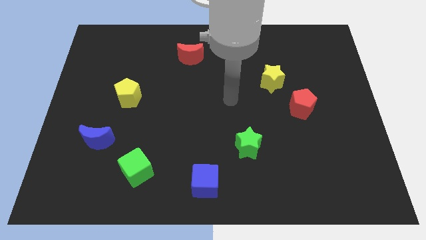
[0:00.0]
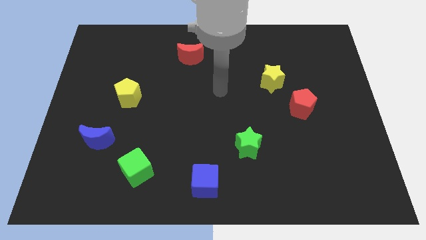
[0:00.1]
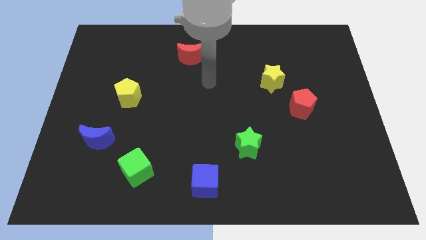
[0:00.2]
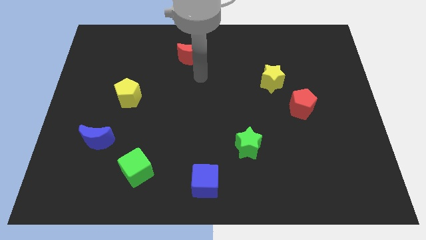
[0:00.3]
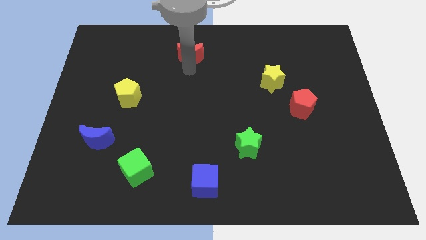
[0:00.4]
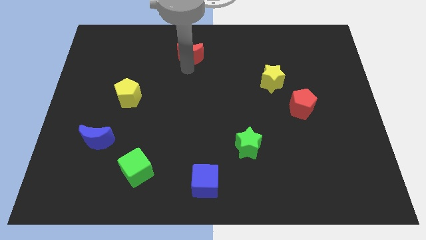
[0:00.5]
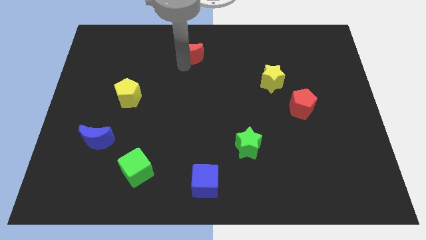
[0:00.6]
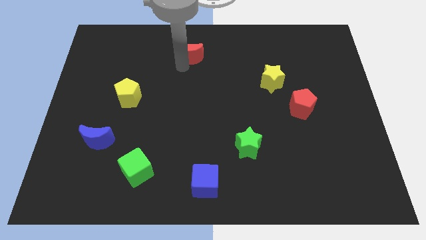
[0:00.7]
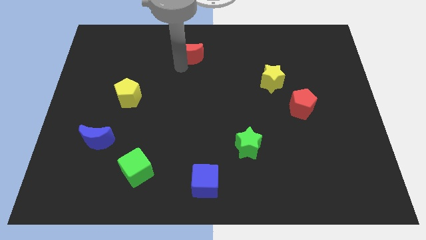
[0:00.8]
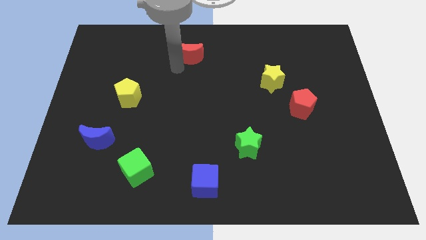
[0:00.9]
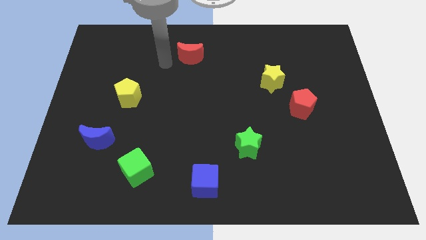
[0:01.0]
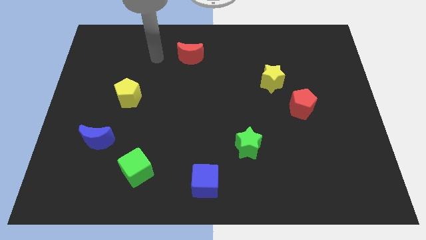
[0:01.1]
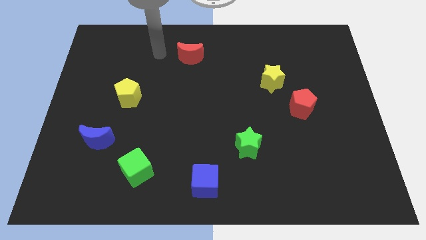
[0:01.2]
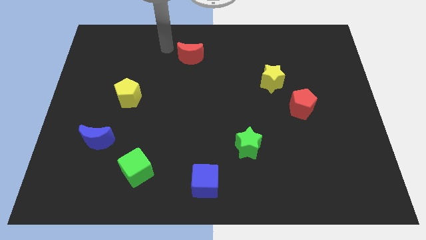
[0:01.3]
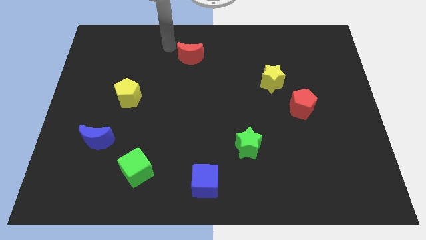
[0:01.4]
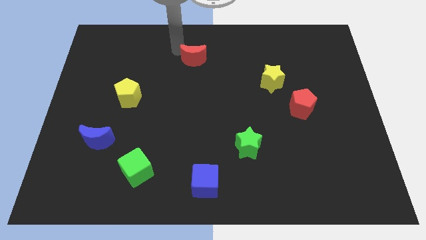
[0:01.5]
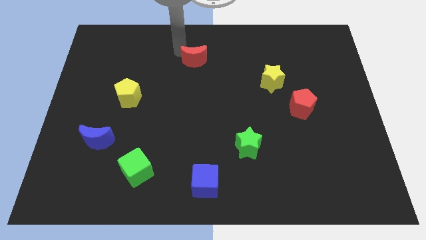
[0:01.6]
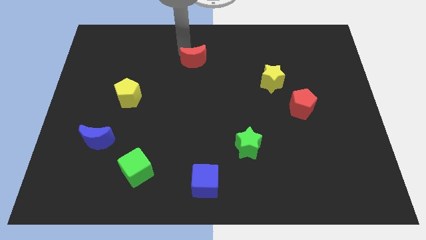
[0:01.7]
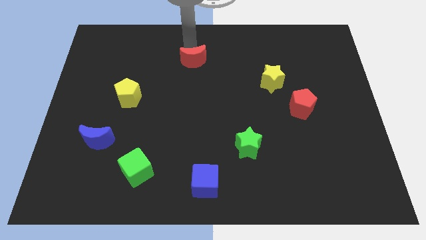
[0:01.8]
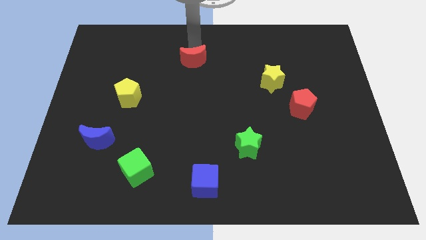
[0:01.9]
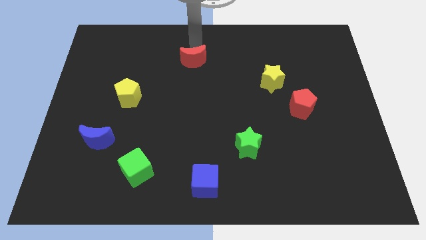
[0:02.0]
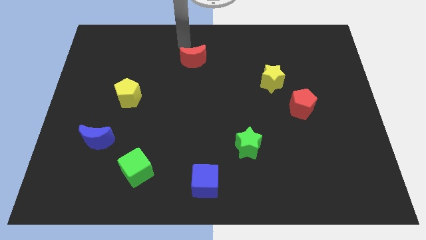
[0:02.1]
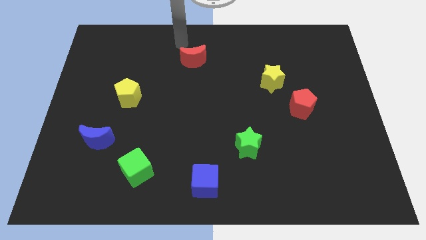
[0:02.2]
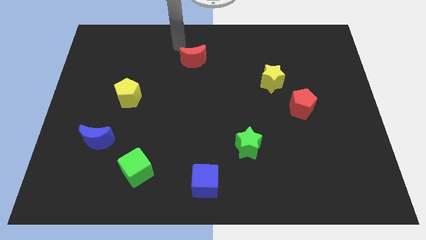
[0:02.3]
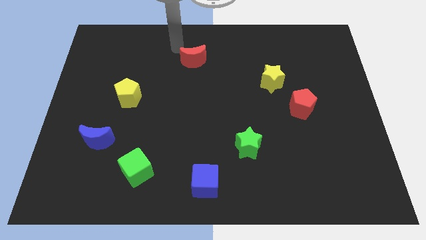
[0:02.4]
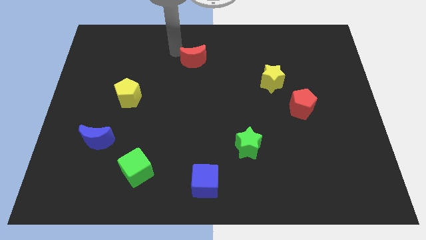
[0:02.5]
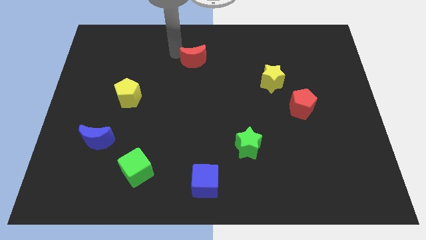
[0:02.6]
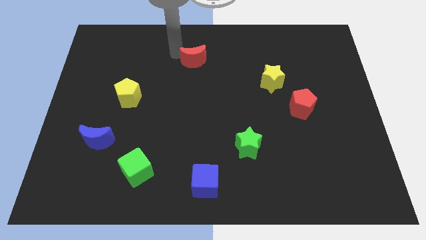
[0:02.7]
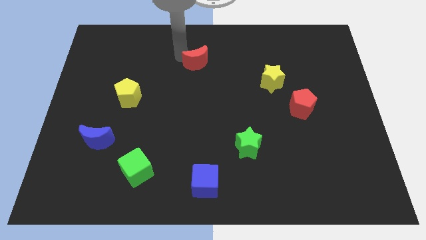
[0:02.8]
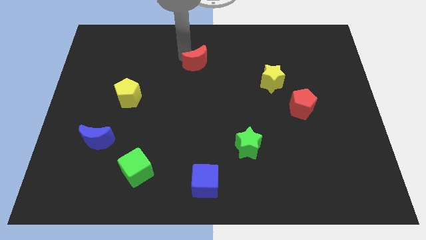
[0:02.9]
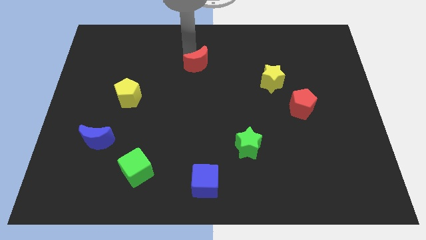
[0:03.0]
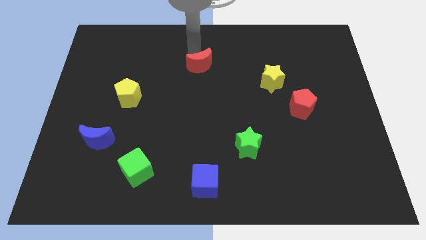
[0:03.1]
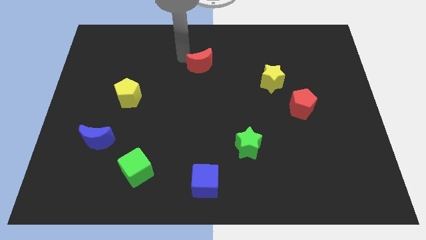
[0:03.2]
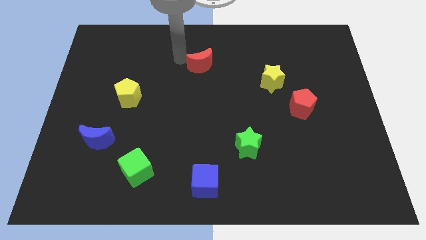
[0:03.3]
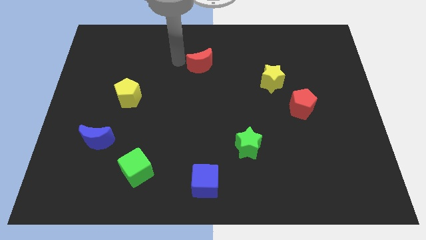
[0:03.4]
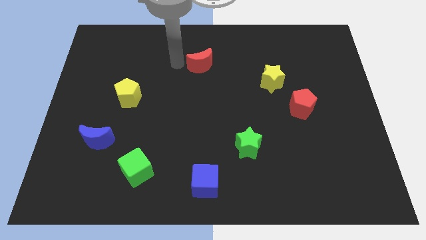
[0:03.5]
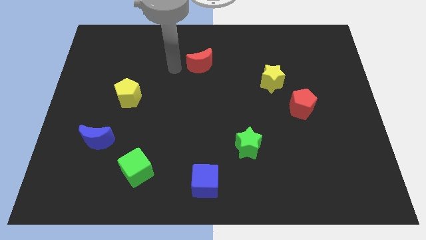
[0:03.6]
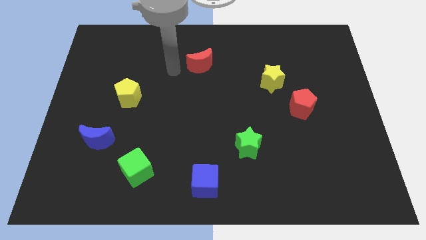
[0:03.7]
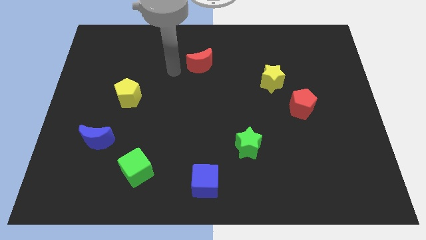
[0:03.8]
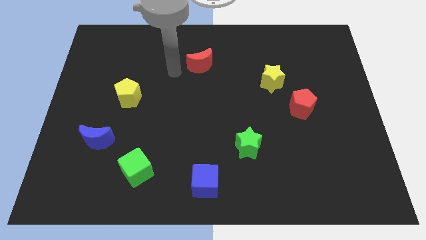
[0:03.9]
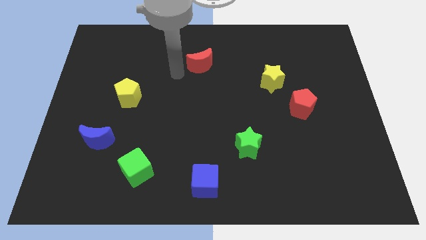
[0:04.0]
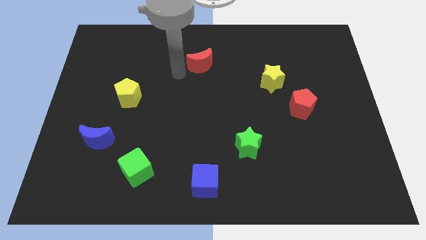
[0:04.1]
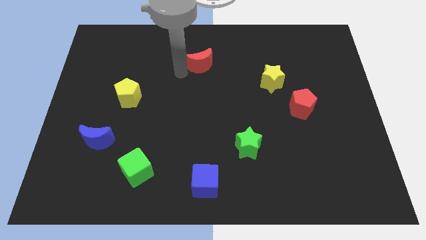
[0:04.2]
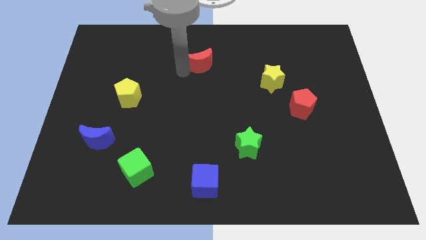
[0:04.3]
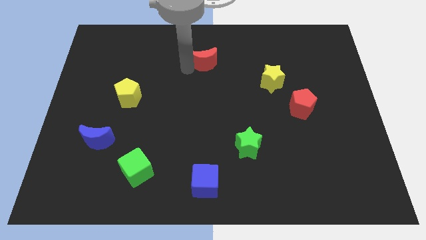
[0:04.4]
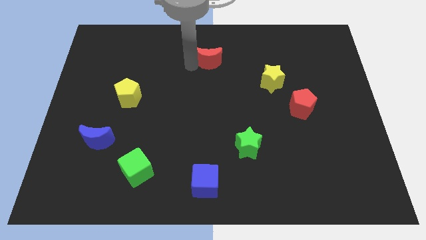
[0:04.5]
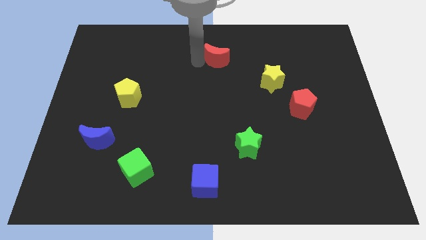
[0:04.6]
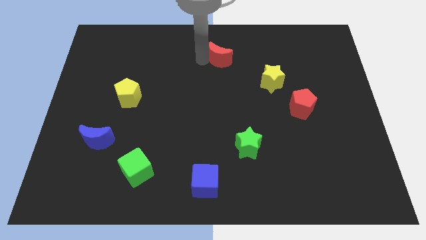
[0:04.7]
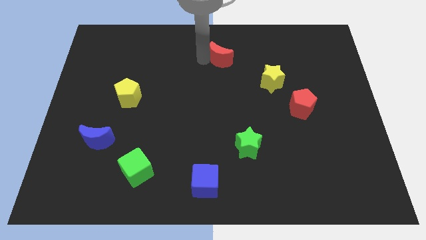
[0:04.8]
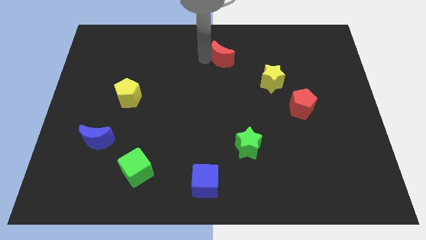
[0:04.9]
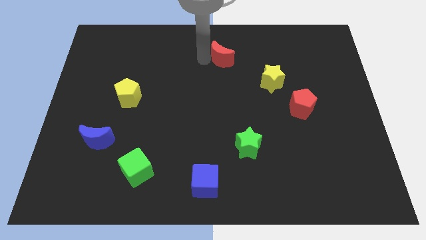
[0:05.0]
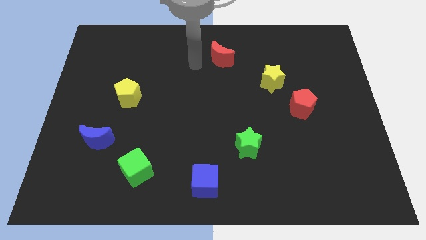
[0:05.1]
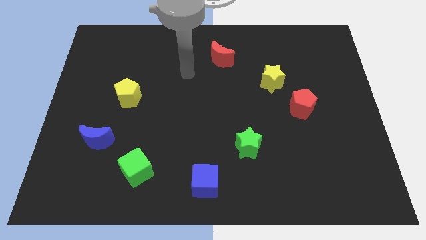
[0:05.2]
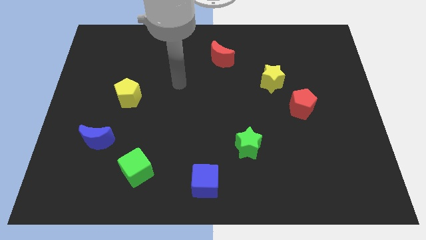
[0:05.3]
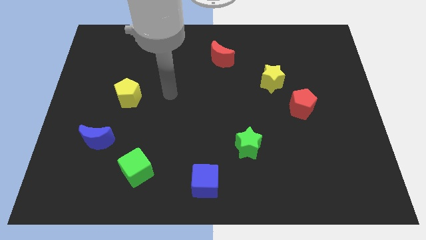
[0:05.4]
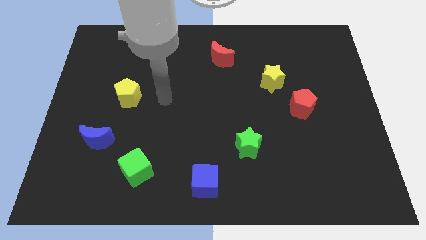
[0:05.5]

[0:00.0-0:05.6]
push the red crescent to the right of the board

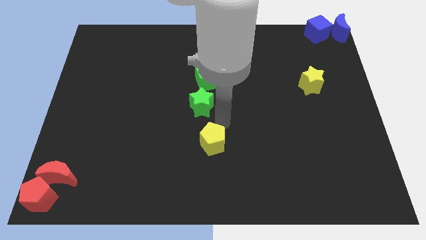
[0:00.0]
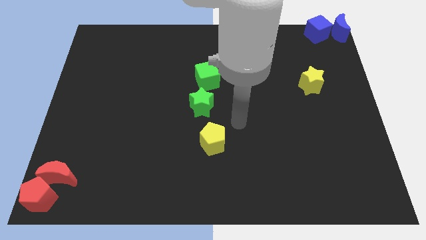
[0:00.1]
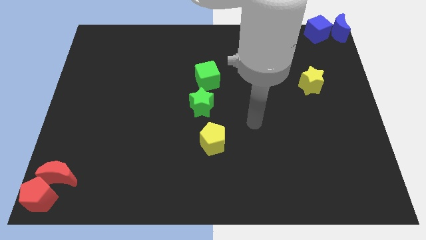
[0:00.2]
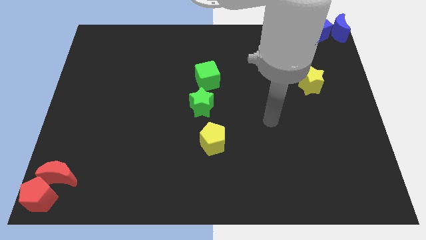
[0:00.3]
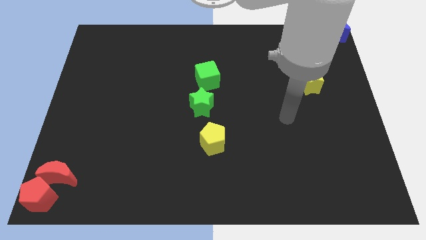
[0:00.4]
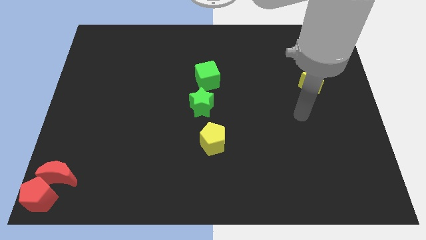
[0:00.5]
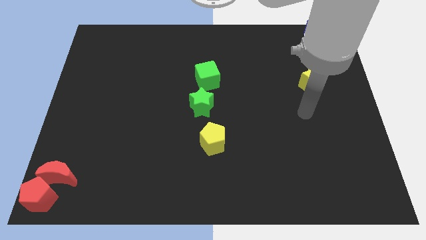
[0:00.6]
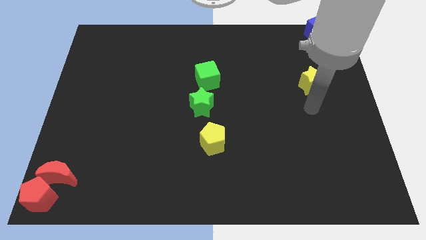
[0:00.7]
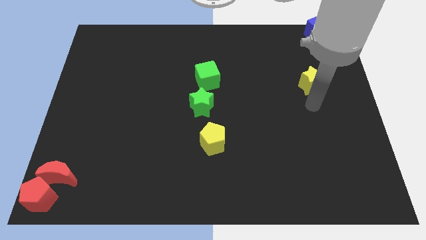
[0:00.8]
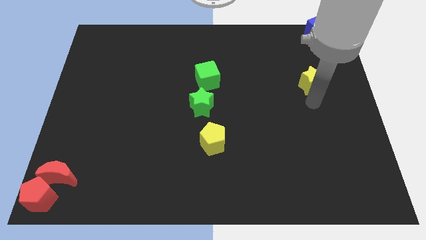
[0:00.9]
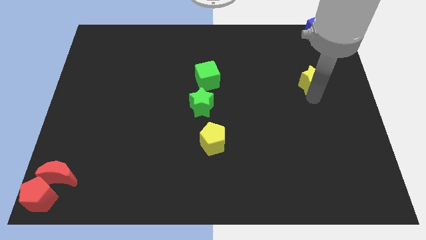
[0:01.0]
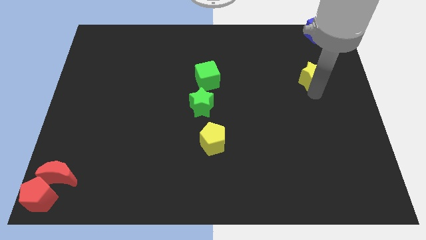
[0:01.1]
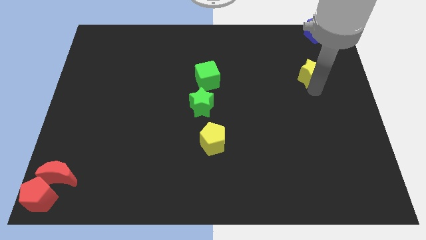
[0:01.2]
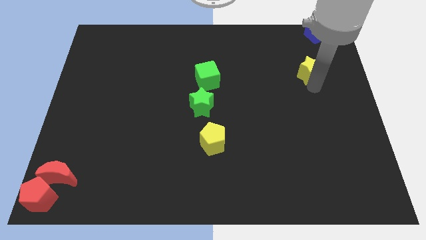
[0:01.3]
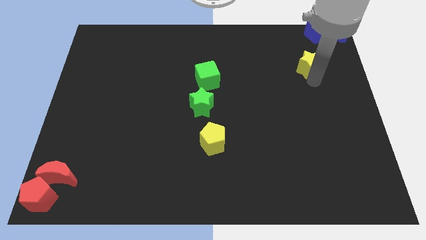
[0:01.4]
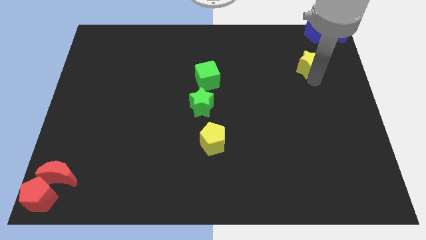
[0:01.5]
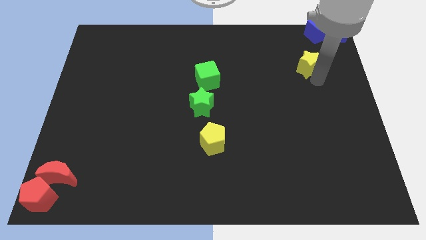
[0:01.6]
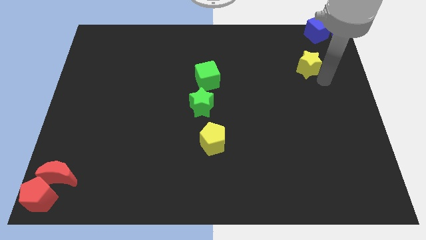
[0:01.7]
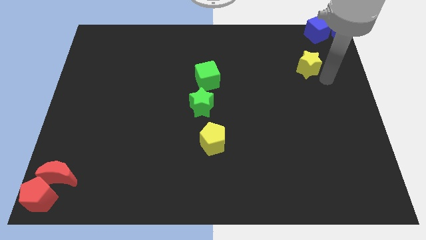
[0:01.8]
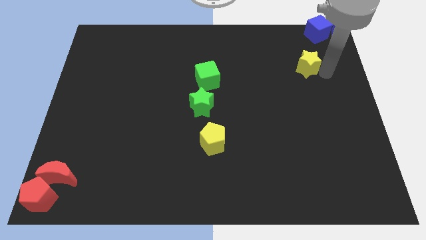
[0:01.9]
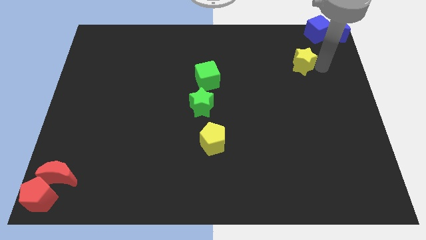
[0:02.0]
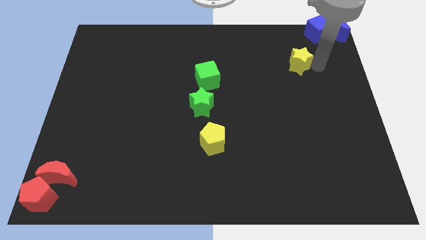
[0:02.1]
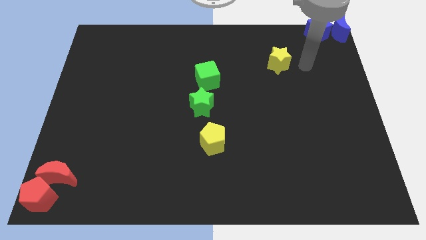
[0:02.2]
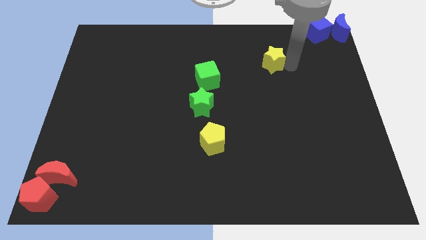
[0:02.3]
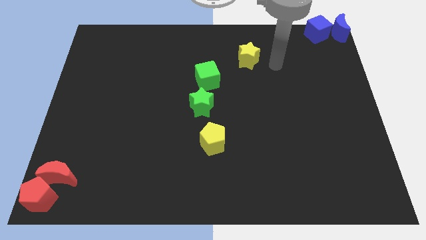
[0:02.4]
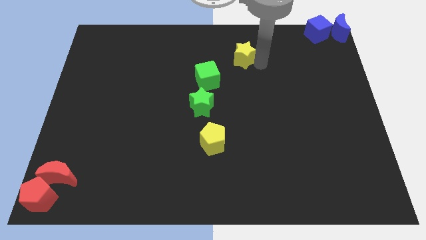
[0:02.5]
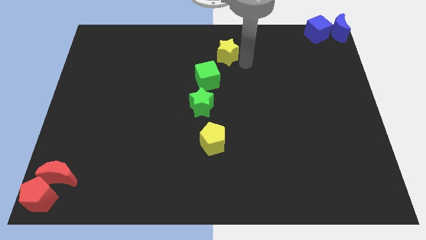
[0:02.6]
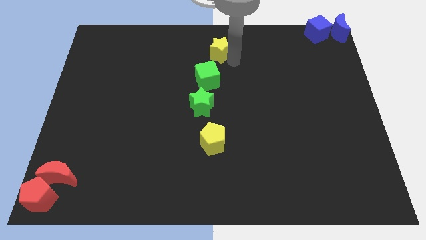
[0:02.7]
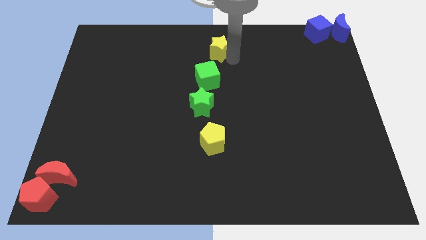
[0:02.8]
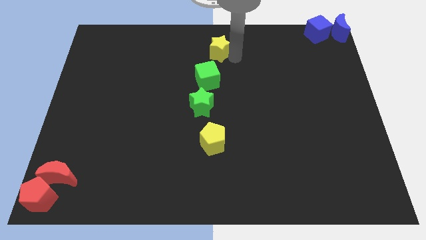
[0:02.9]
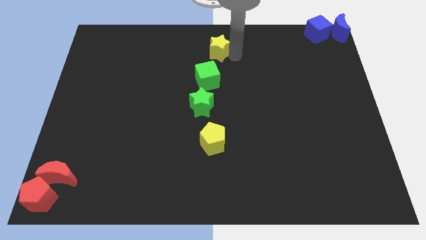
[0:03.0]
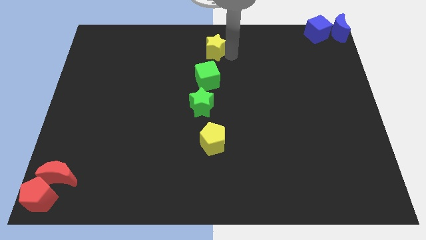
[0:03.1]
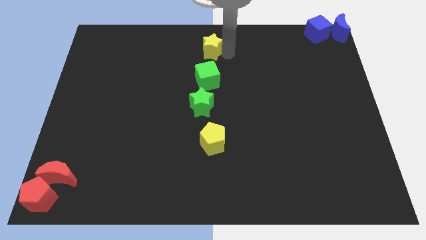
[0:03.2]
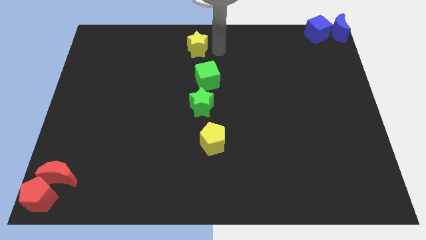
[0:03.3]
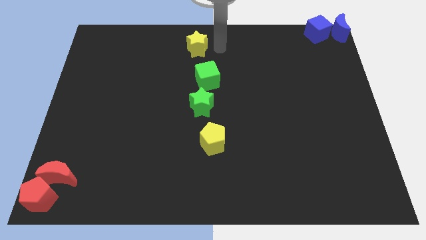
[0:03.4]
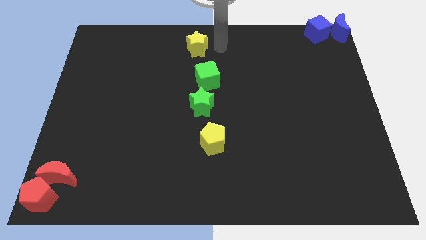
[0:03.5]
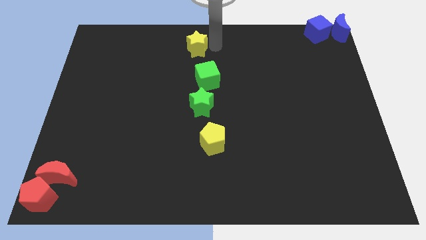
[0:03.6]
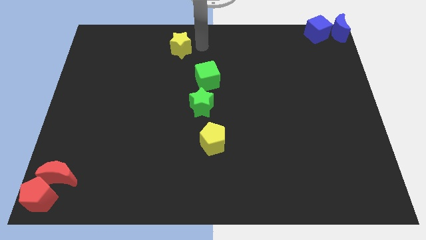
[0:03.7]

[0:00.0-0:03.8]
move the yellow star towards the top center of the board
